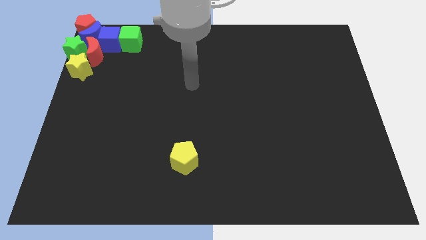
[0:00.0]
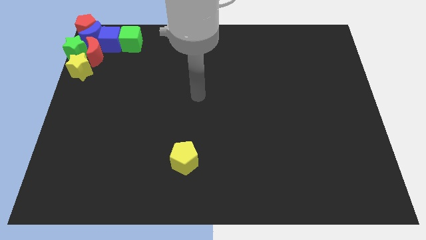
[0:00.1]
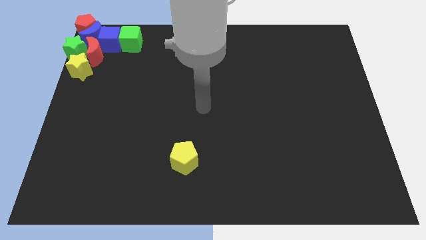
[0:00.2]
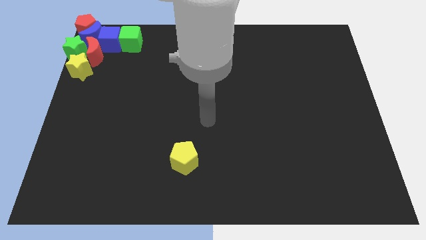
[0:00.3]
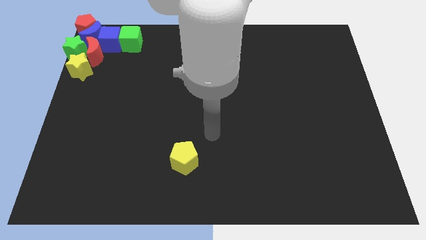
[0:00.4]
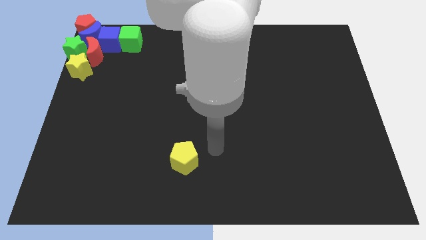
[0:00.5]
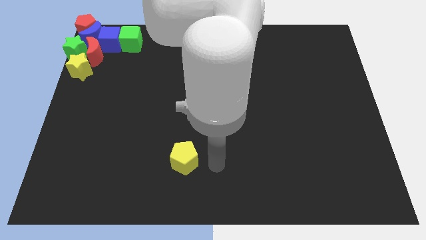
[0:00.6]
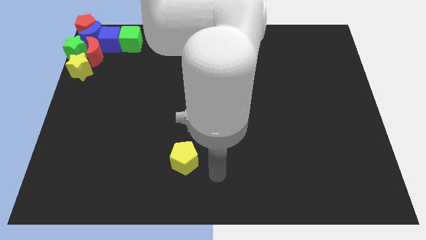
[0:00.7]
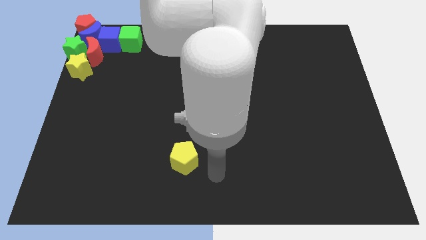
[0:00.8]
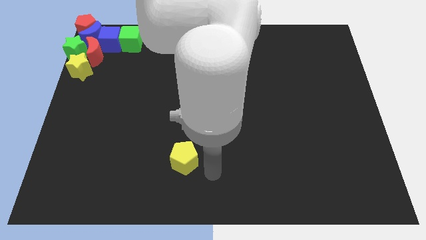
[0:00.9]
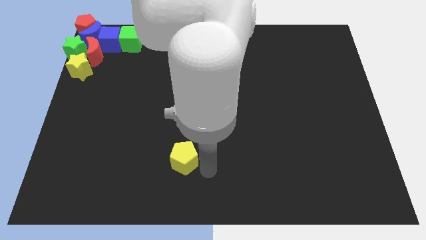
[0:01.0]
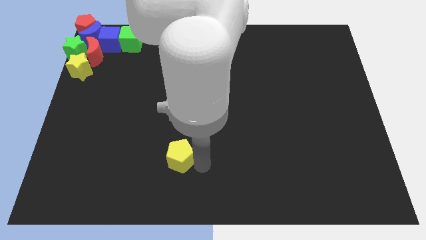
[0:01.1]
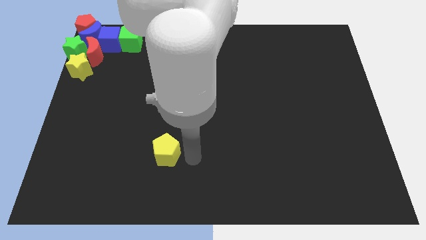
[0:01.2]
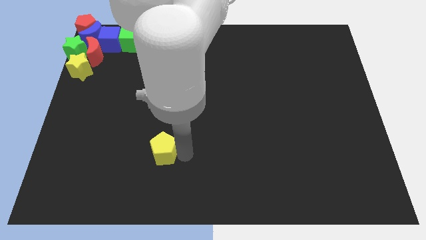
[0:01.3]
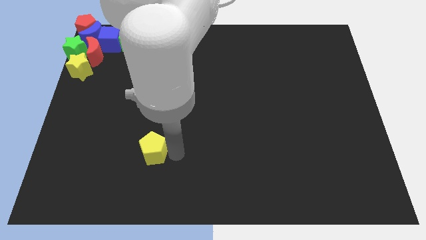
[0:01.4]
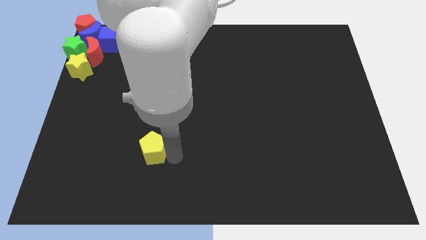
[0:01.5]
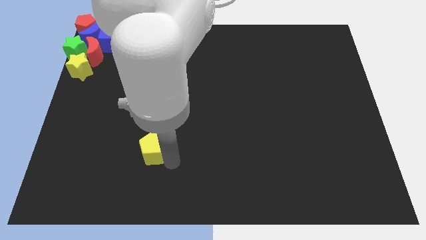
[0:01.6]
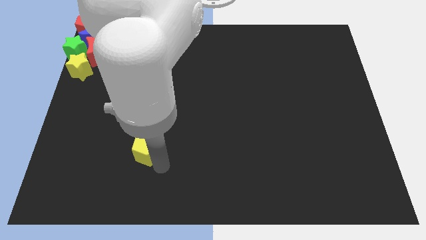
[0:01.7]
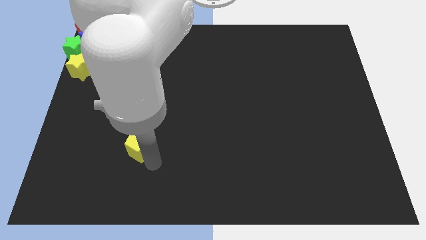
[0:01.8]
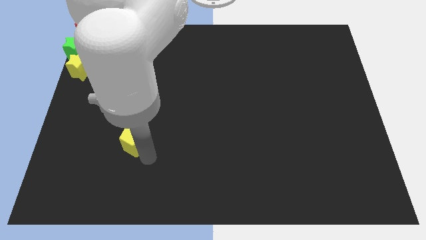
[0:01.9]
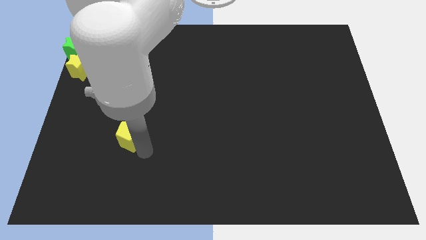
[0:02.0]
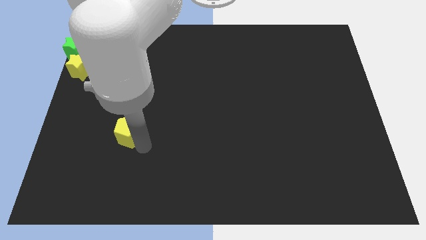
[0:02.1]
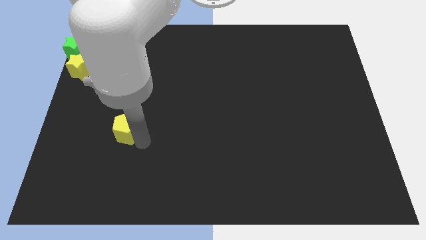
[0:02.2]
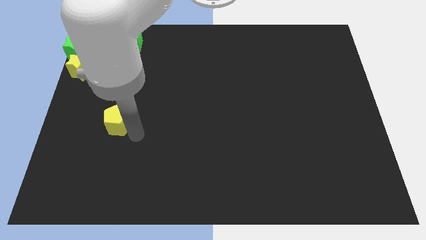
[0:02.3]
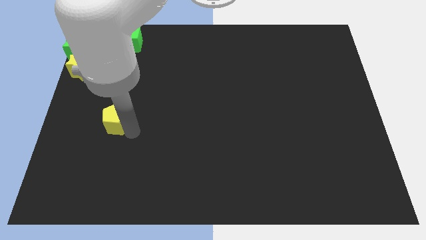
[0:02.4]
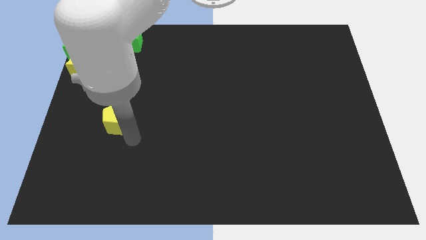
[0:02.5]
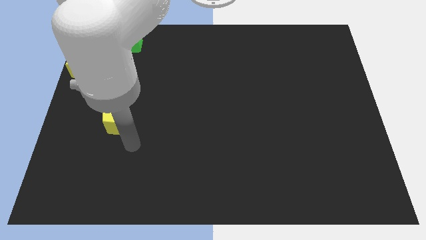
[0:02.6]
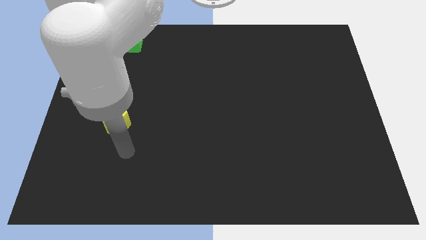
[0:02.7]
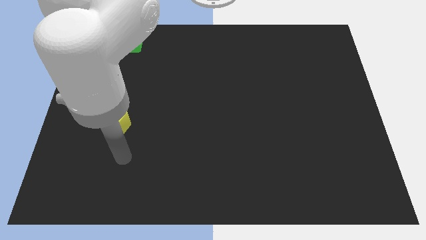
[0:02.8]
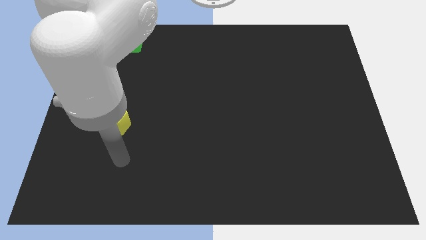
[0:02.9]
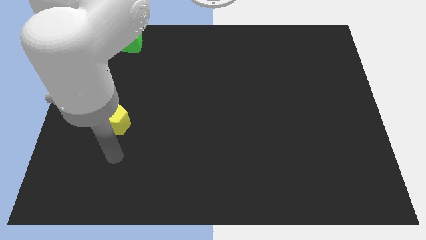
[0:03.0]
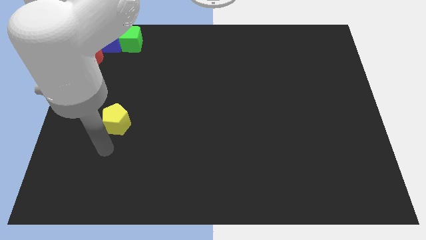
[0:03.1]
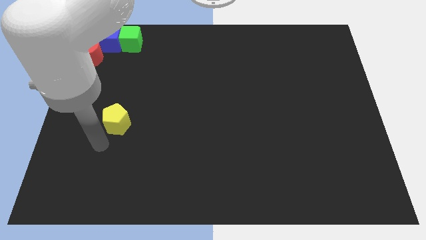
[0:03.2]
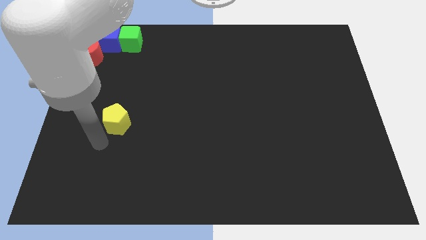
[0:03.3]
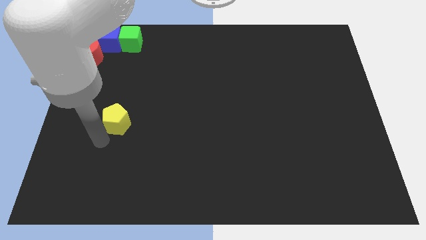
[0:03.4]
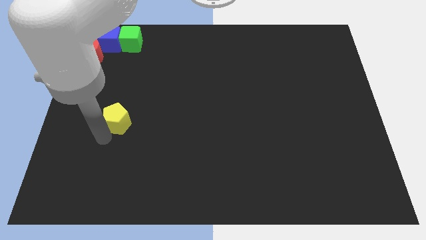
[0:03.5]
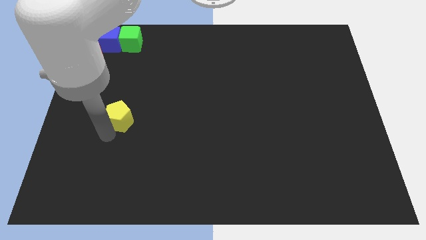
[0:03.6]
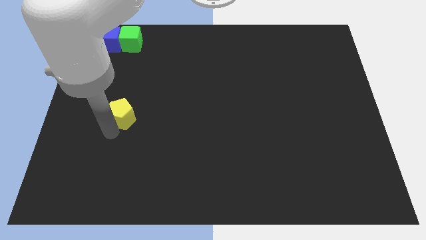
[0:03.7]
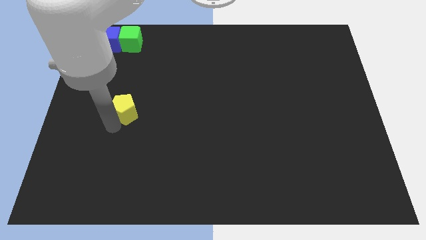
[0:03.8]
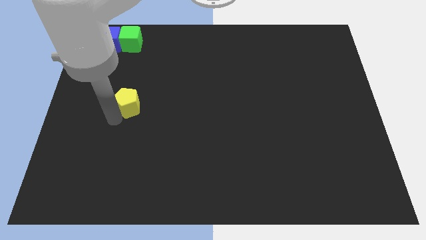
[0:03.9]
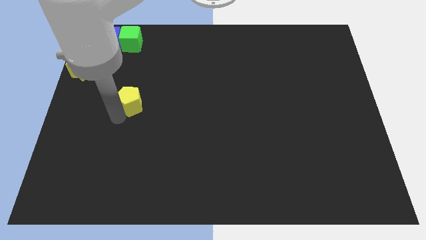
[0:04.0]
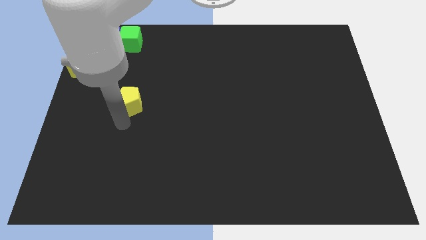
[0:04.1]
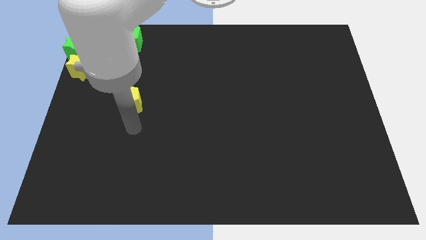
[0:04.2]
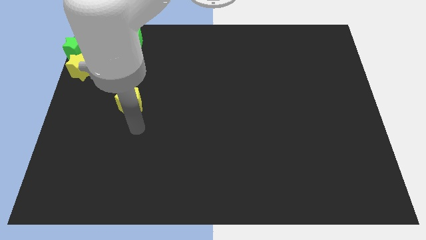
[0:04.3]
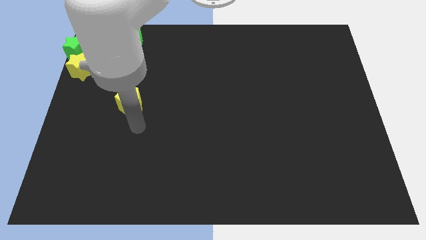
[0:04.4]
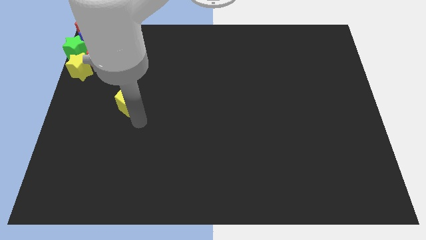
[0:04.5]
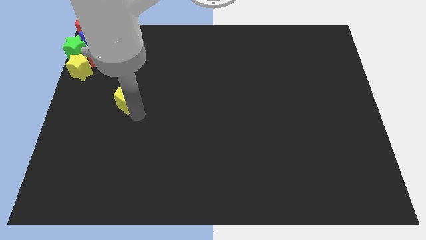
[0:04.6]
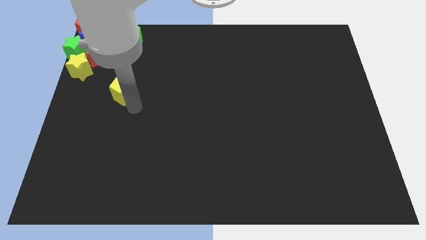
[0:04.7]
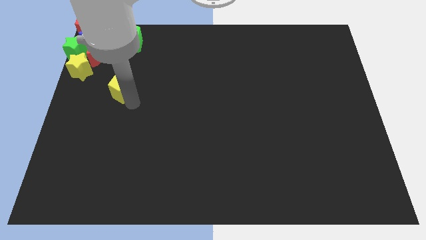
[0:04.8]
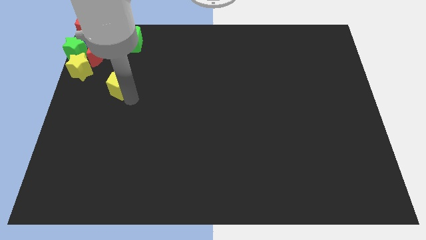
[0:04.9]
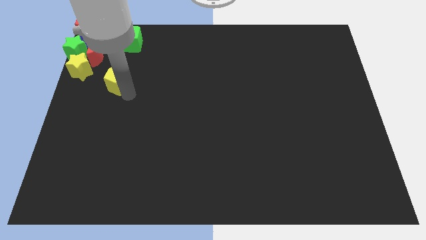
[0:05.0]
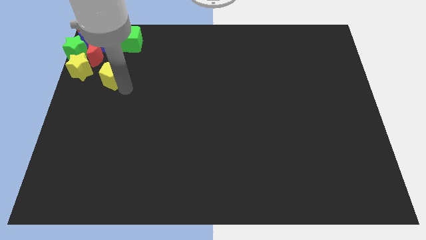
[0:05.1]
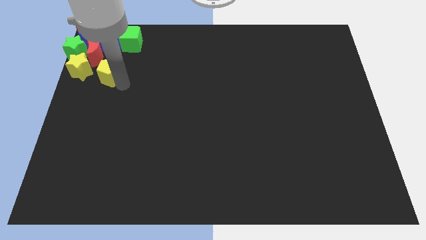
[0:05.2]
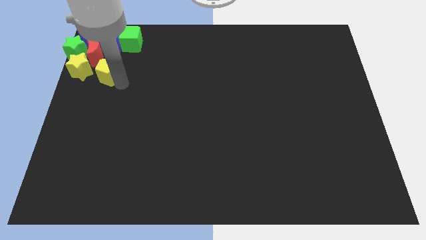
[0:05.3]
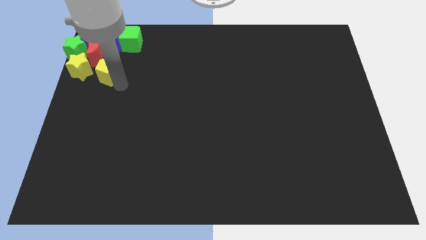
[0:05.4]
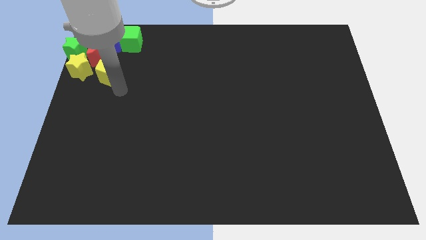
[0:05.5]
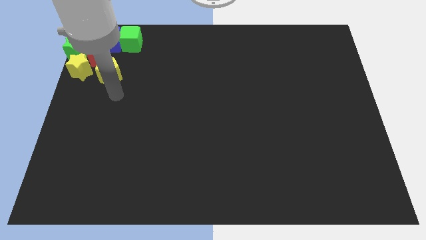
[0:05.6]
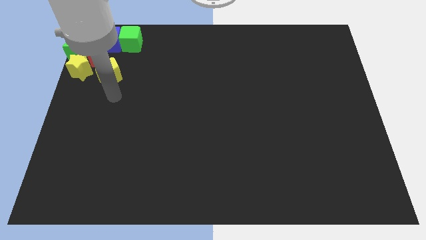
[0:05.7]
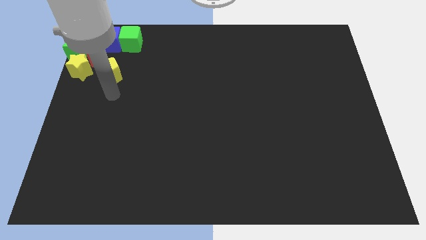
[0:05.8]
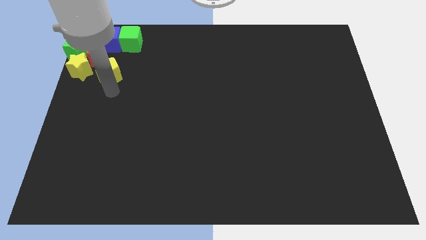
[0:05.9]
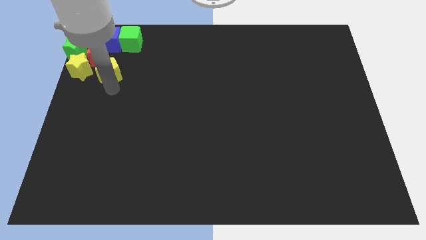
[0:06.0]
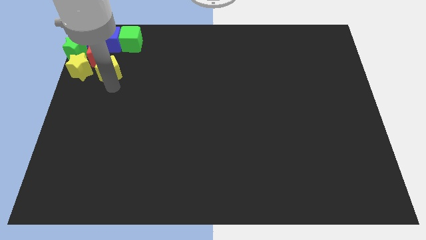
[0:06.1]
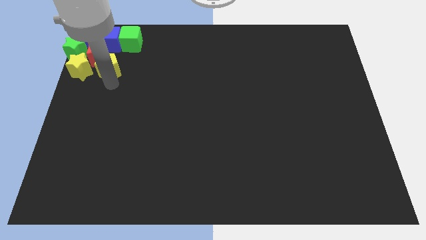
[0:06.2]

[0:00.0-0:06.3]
move the yellow pentagon towards the left top corner of the board

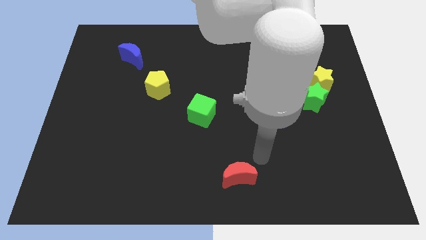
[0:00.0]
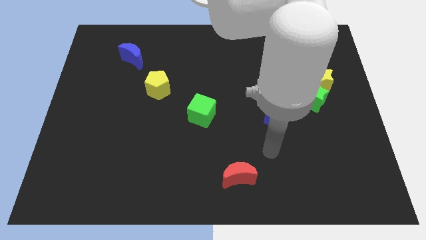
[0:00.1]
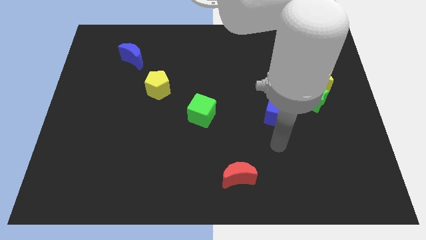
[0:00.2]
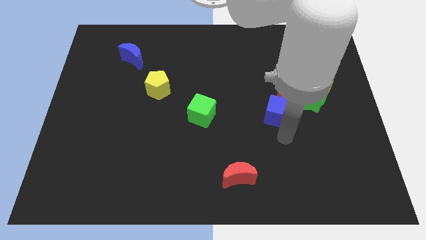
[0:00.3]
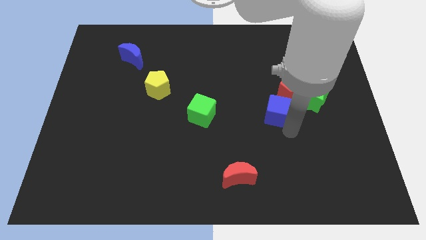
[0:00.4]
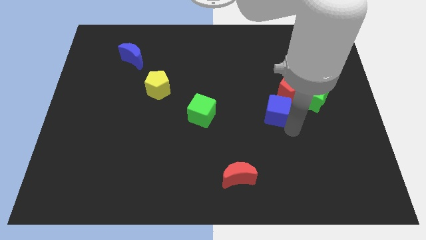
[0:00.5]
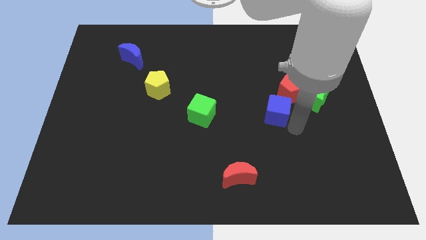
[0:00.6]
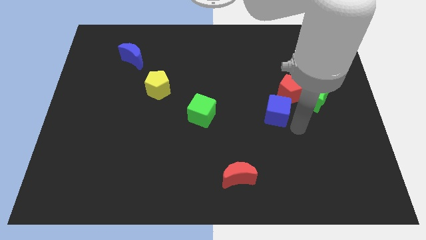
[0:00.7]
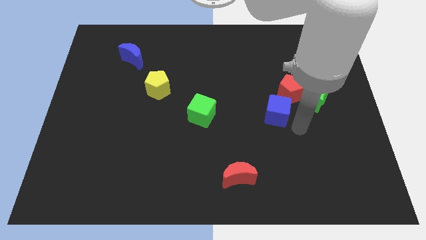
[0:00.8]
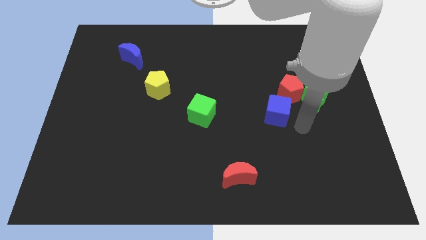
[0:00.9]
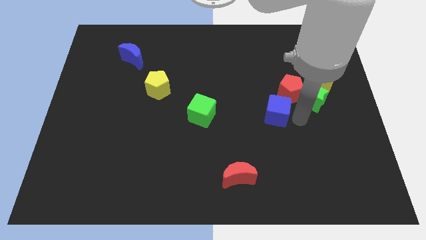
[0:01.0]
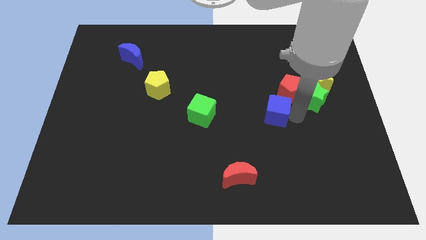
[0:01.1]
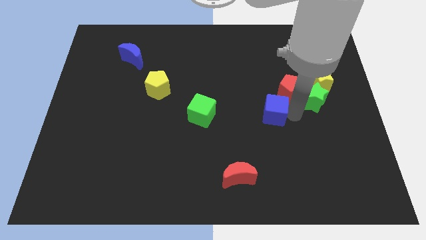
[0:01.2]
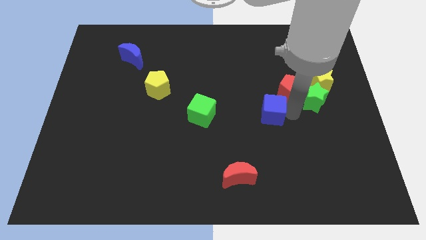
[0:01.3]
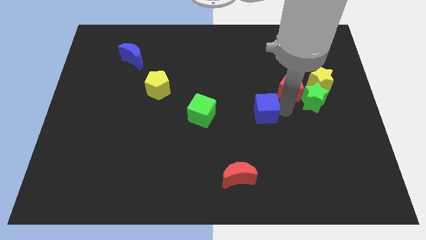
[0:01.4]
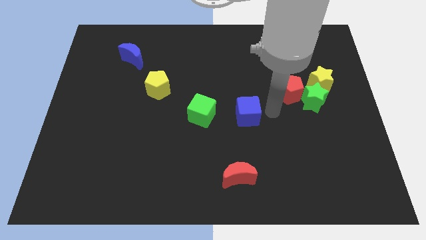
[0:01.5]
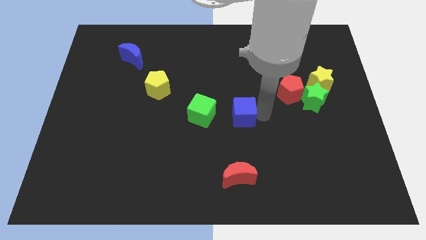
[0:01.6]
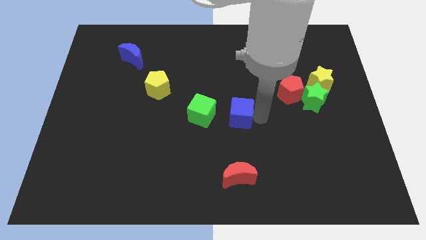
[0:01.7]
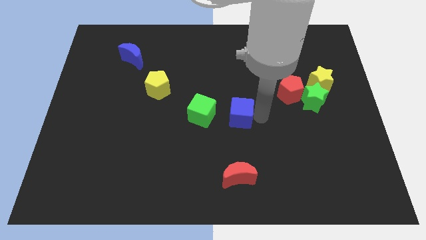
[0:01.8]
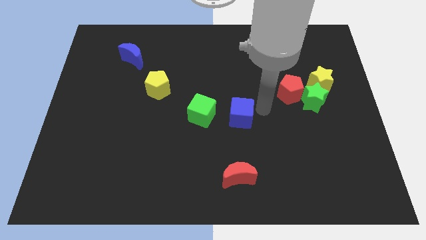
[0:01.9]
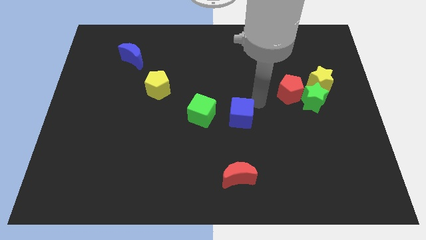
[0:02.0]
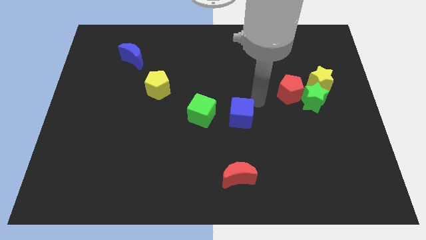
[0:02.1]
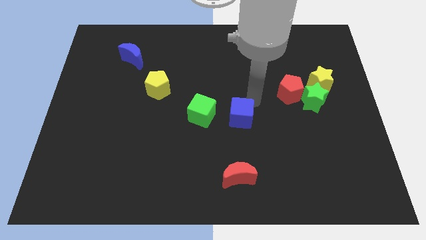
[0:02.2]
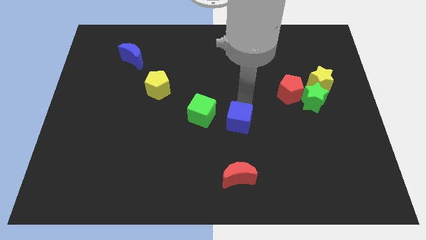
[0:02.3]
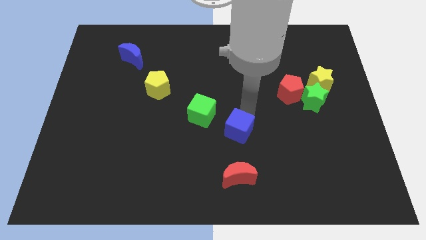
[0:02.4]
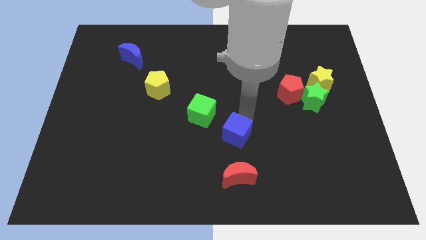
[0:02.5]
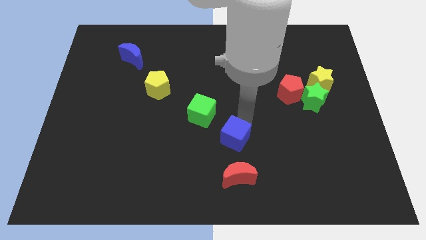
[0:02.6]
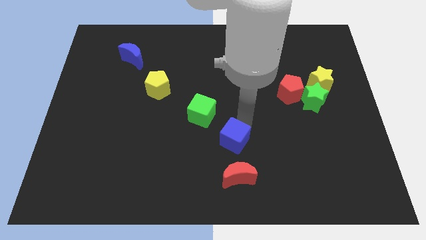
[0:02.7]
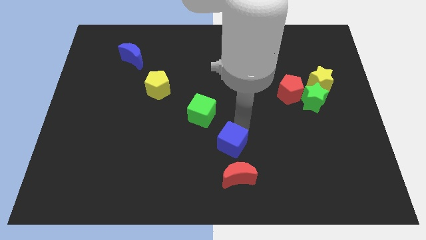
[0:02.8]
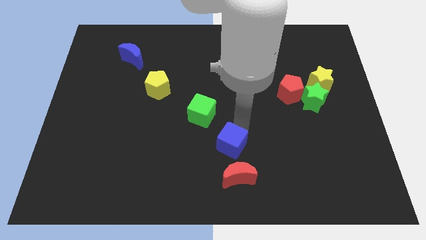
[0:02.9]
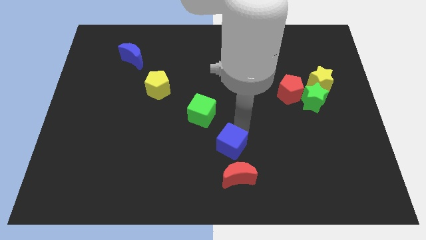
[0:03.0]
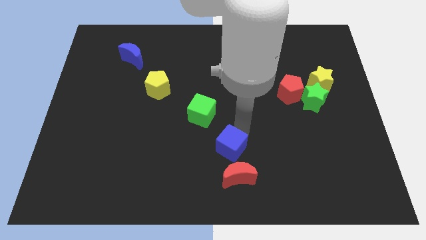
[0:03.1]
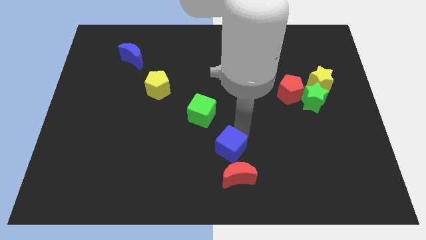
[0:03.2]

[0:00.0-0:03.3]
place the blue cube on top of red crescent
